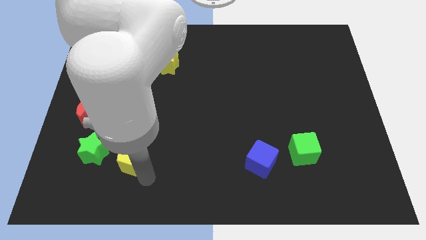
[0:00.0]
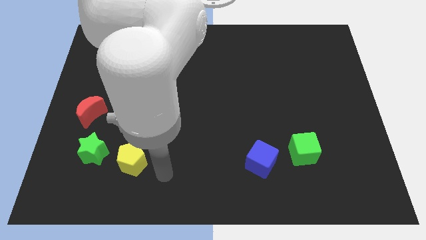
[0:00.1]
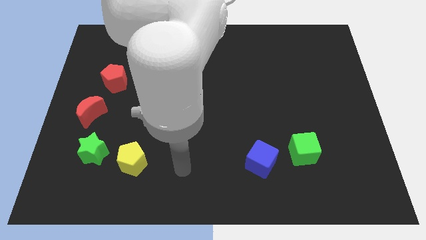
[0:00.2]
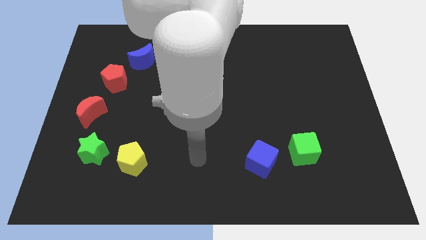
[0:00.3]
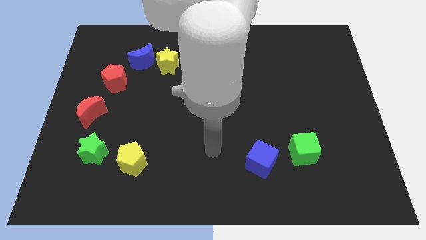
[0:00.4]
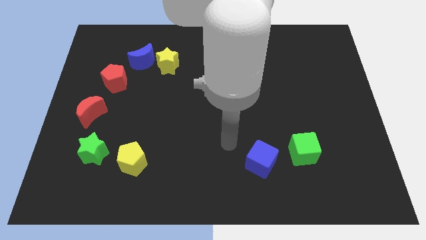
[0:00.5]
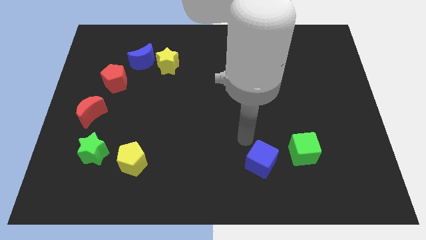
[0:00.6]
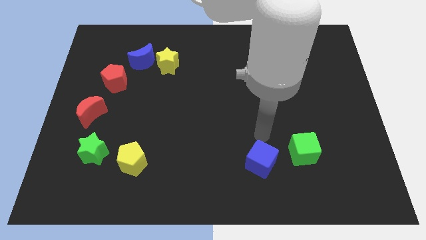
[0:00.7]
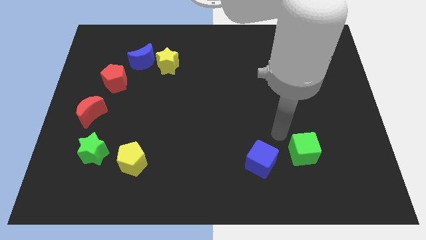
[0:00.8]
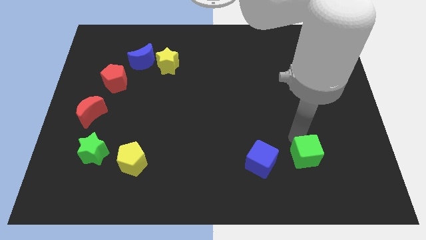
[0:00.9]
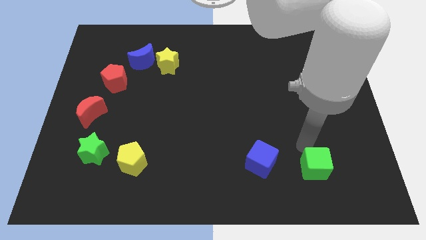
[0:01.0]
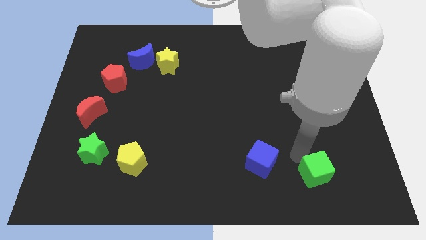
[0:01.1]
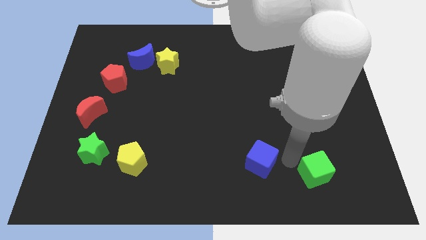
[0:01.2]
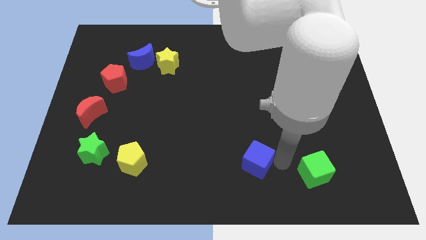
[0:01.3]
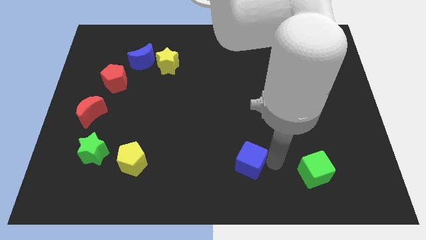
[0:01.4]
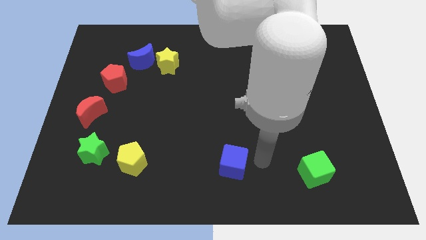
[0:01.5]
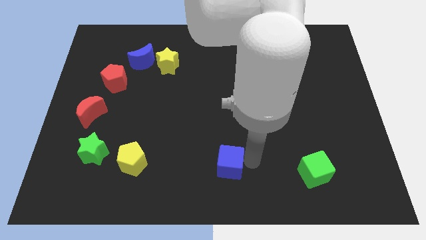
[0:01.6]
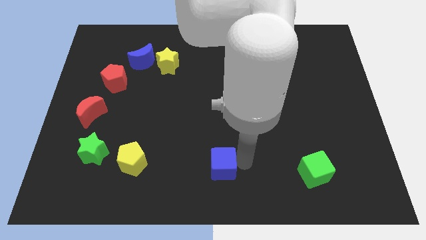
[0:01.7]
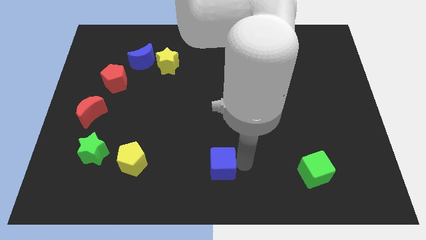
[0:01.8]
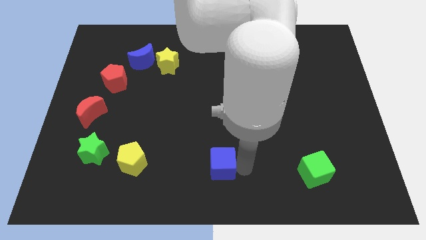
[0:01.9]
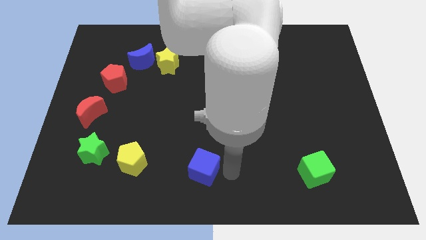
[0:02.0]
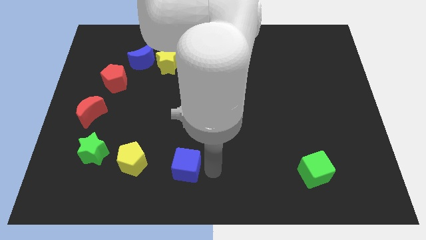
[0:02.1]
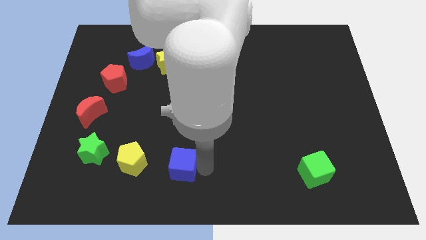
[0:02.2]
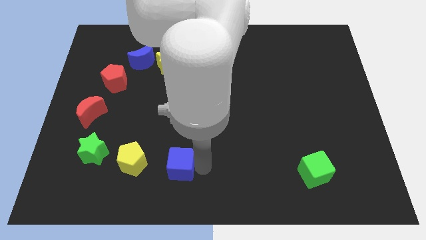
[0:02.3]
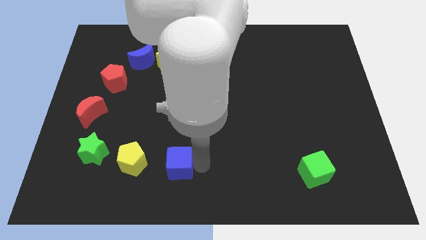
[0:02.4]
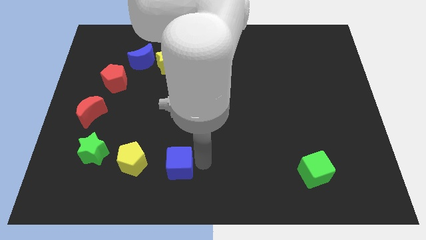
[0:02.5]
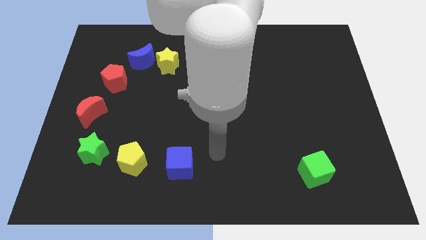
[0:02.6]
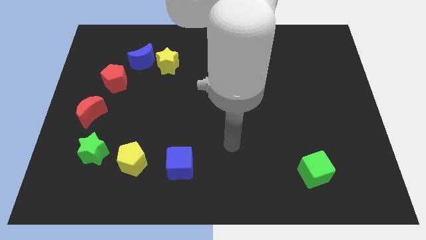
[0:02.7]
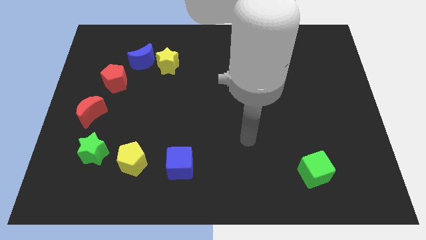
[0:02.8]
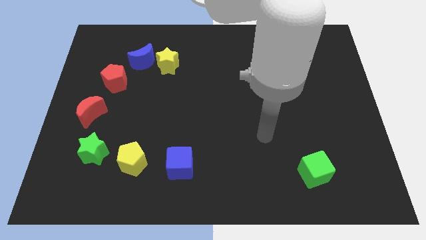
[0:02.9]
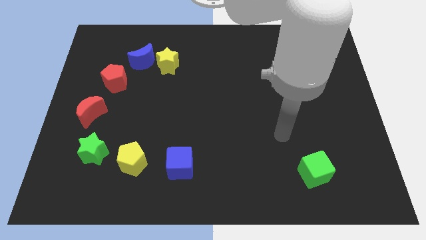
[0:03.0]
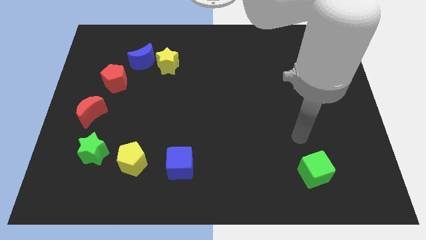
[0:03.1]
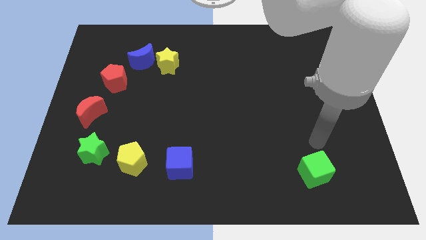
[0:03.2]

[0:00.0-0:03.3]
place the blue cube to the right side of yellow pentagon

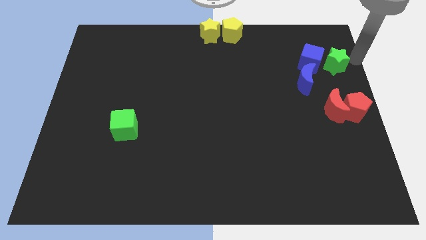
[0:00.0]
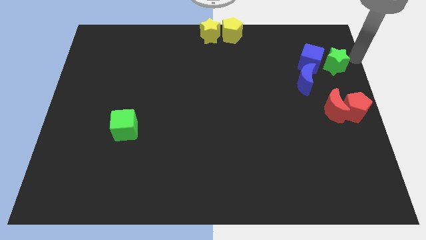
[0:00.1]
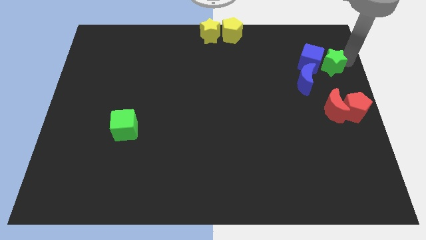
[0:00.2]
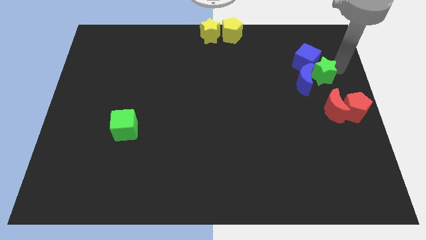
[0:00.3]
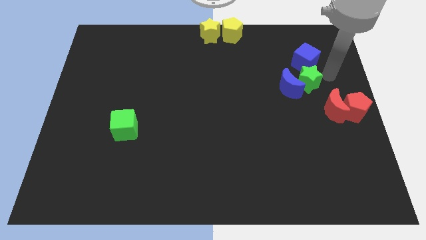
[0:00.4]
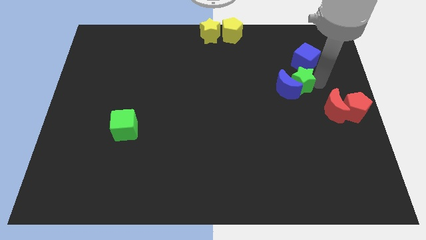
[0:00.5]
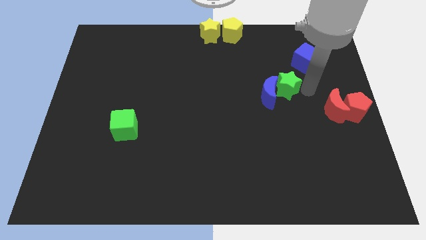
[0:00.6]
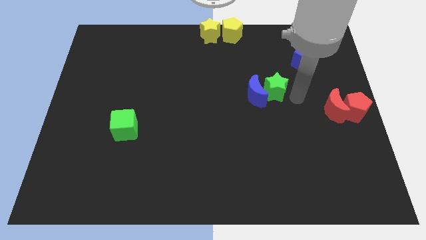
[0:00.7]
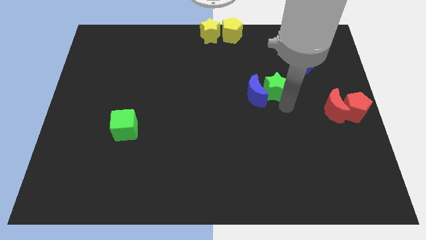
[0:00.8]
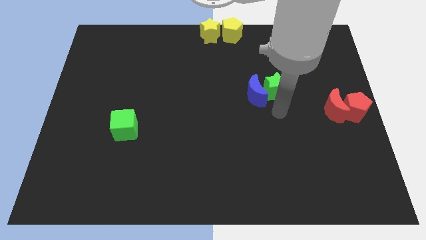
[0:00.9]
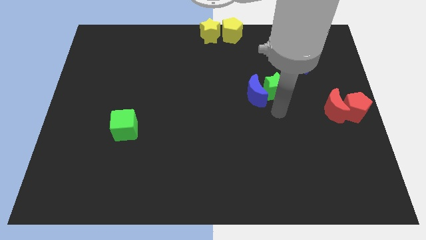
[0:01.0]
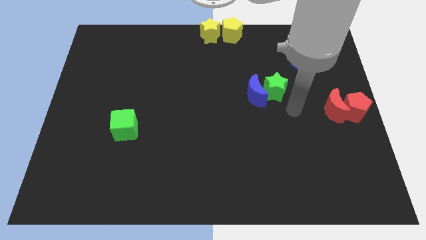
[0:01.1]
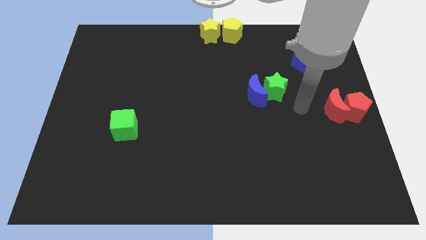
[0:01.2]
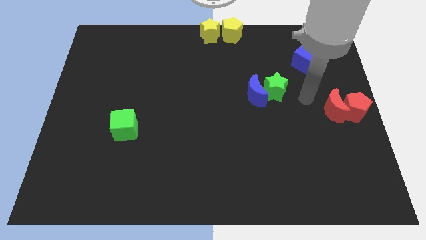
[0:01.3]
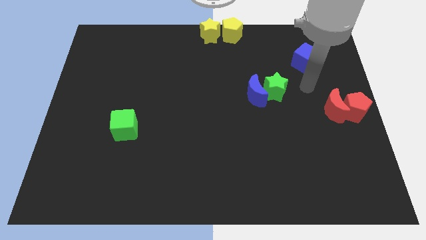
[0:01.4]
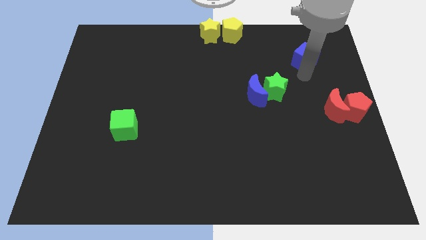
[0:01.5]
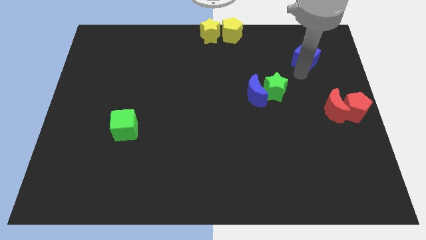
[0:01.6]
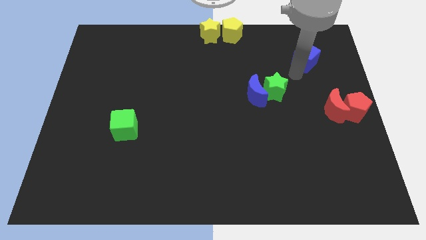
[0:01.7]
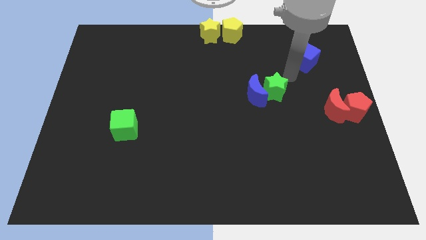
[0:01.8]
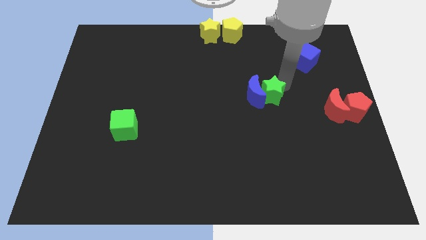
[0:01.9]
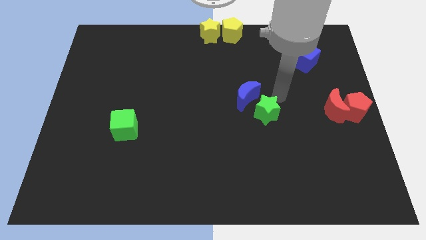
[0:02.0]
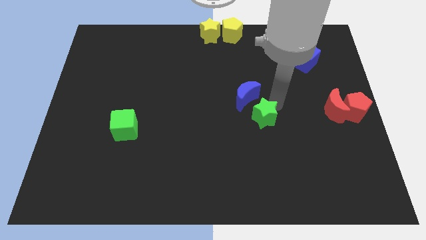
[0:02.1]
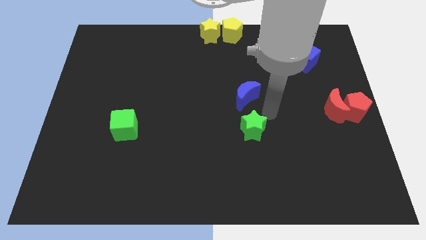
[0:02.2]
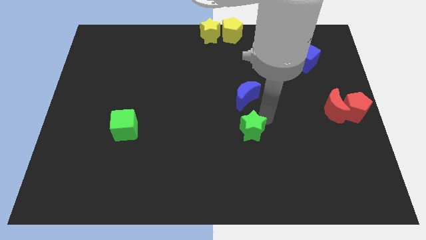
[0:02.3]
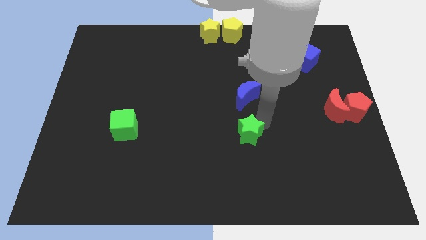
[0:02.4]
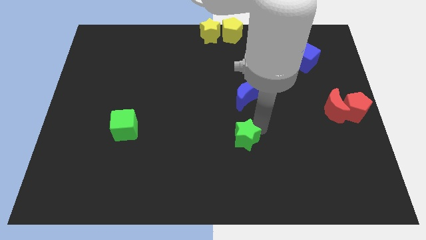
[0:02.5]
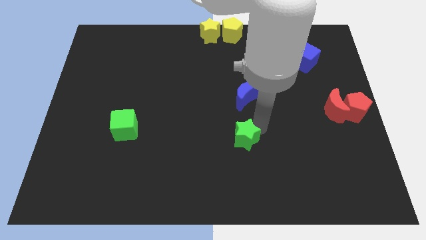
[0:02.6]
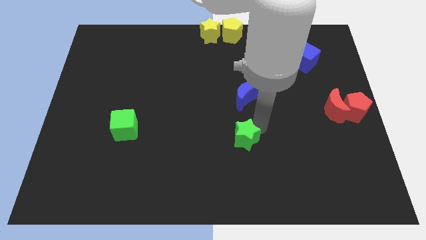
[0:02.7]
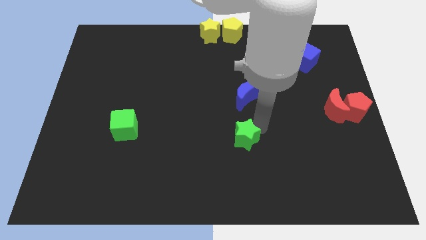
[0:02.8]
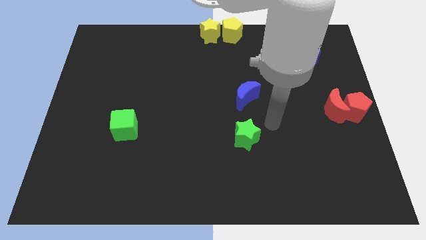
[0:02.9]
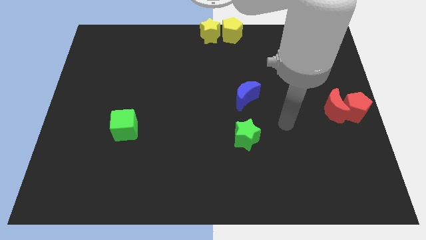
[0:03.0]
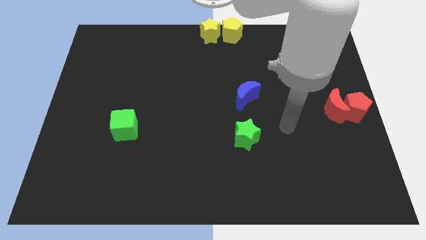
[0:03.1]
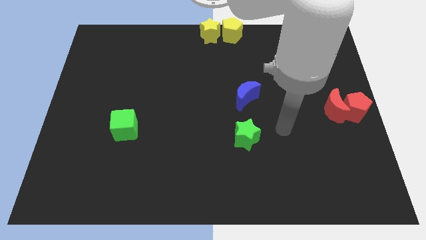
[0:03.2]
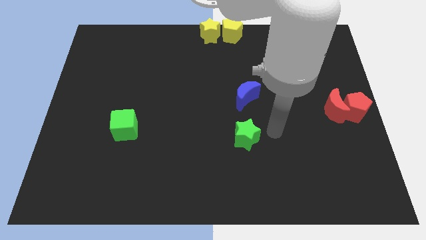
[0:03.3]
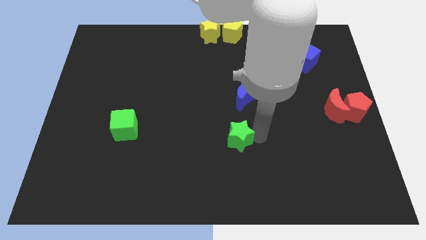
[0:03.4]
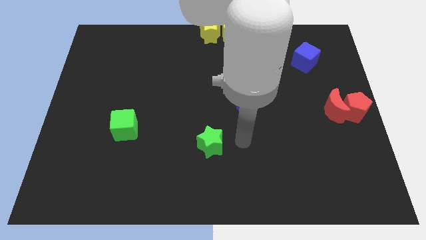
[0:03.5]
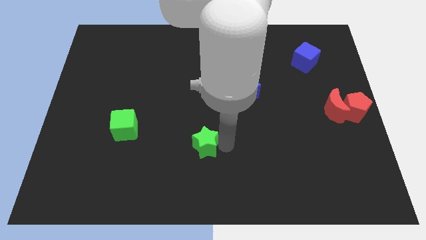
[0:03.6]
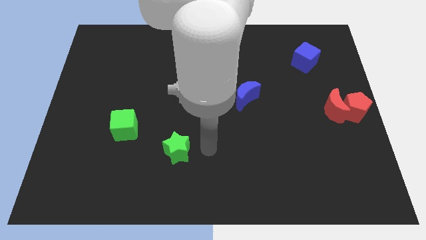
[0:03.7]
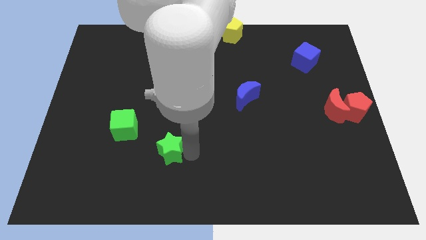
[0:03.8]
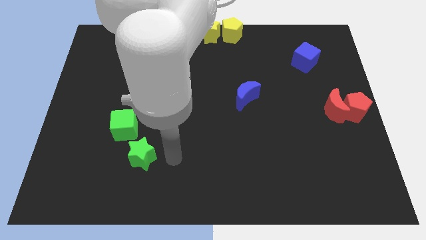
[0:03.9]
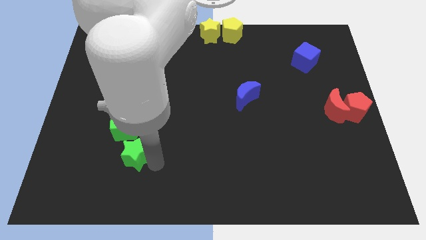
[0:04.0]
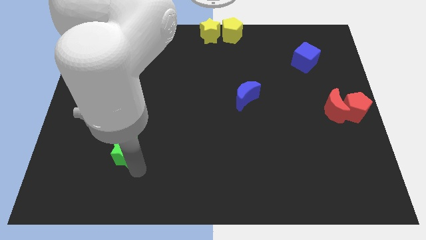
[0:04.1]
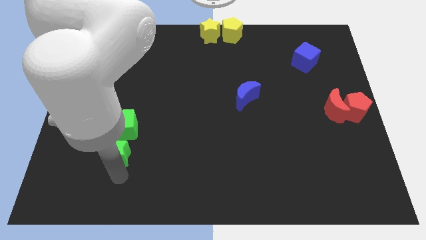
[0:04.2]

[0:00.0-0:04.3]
push the green star below the green cube

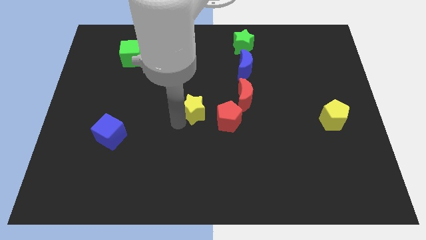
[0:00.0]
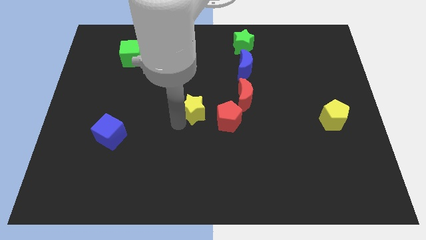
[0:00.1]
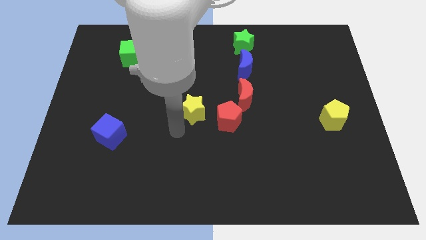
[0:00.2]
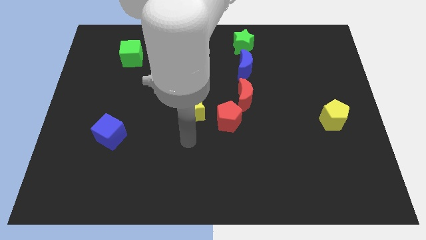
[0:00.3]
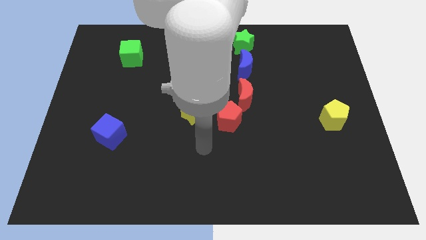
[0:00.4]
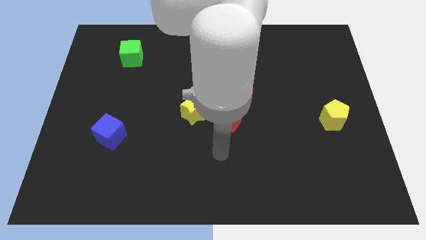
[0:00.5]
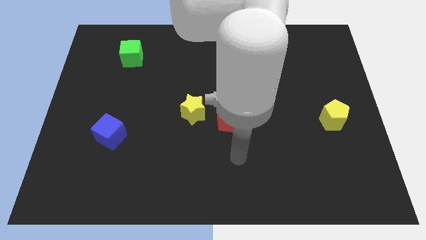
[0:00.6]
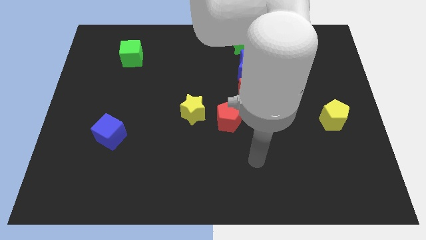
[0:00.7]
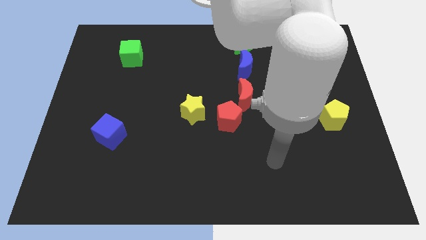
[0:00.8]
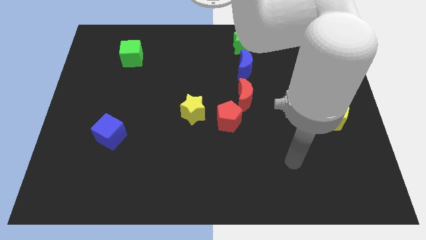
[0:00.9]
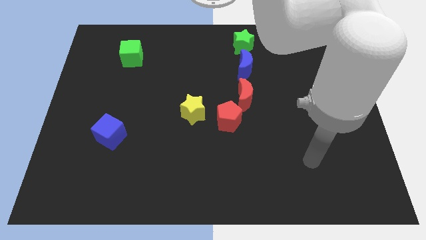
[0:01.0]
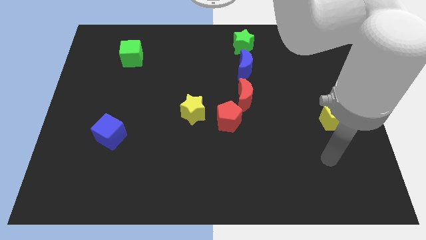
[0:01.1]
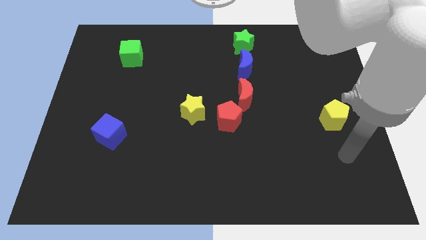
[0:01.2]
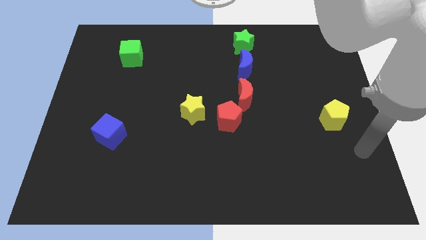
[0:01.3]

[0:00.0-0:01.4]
move your arm away from the yellow star
